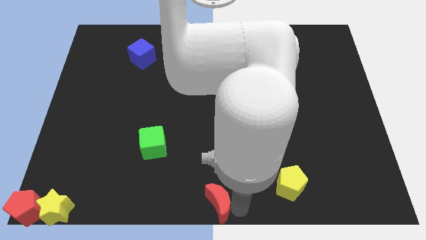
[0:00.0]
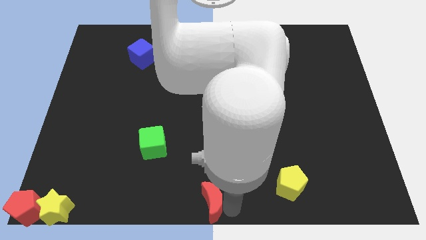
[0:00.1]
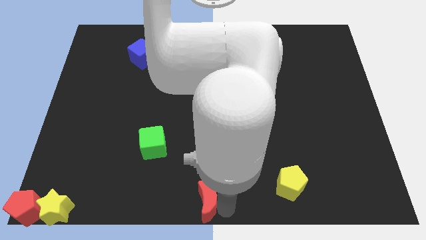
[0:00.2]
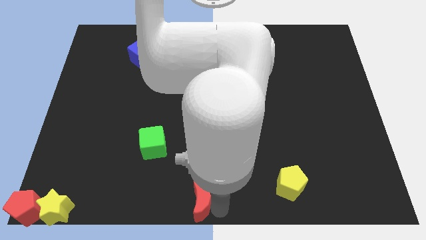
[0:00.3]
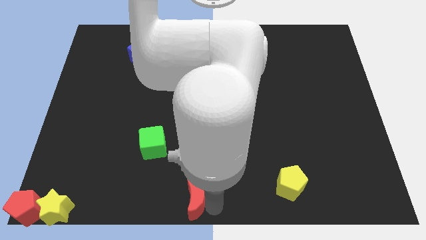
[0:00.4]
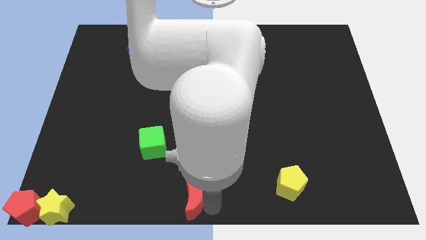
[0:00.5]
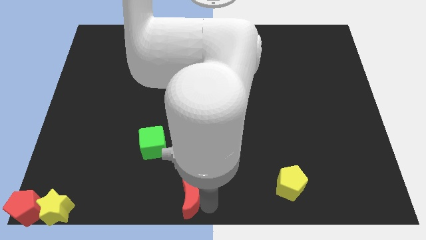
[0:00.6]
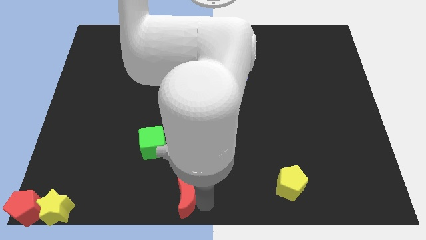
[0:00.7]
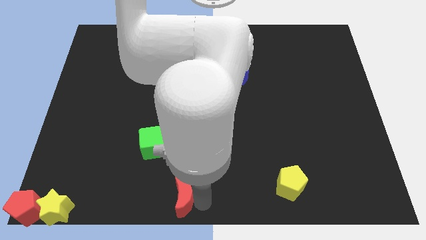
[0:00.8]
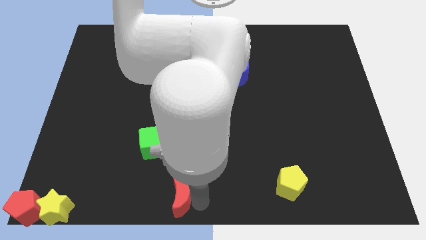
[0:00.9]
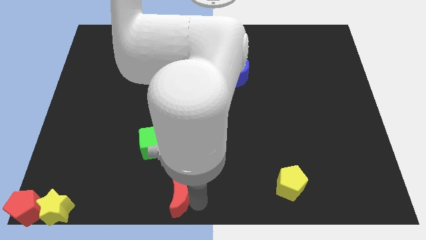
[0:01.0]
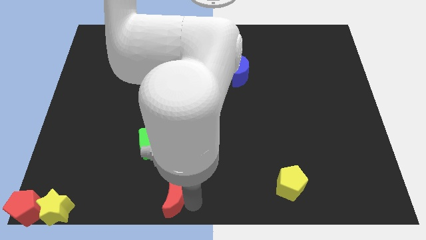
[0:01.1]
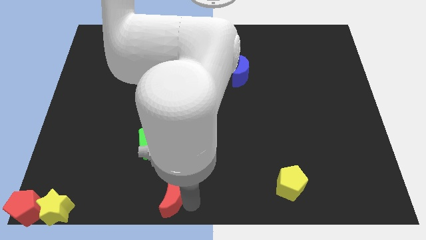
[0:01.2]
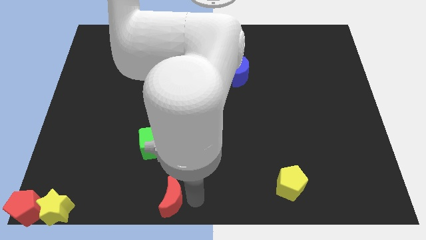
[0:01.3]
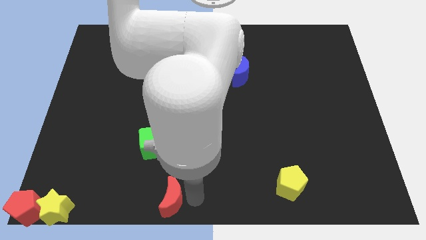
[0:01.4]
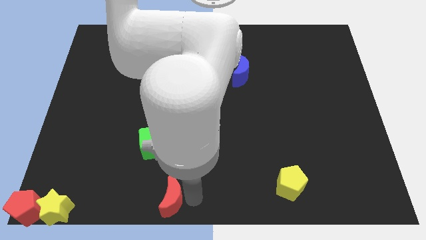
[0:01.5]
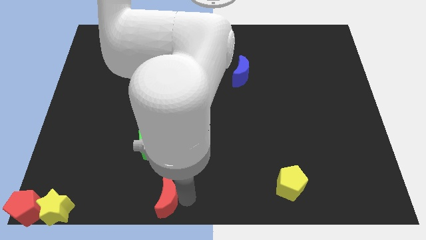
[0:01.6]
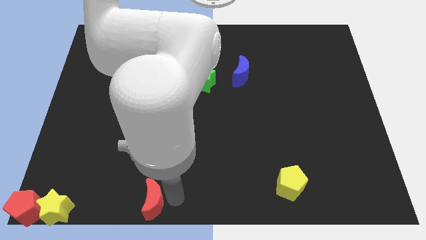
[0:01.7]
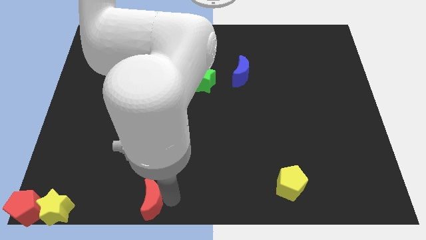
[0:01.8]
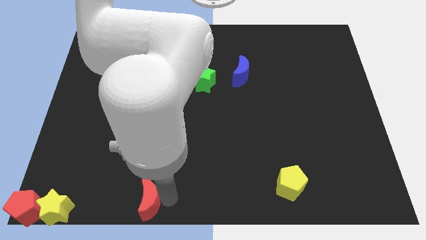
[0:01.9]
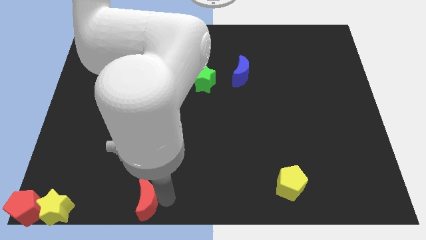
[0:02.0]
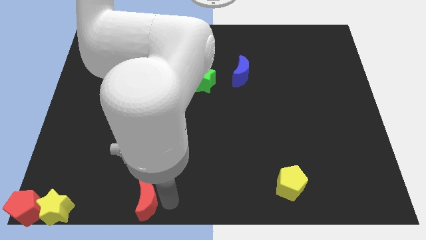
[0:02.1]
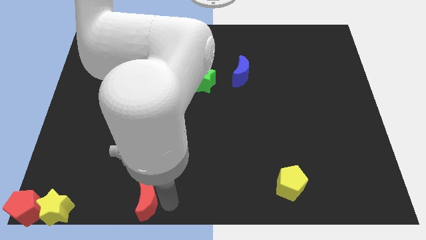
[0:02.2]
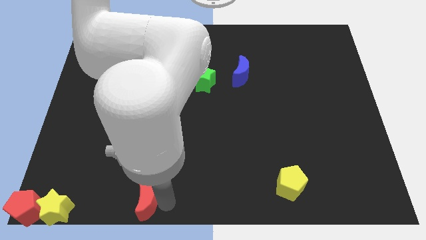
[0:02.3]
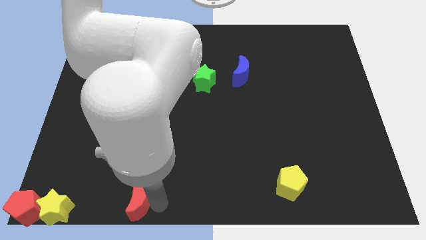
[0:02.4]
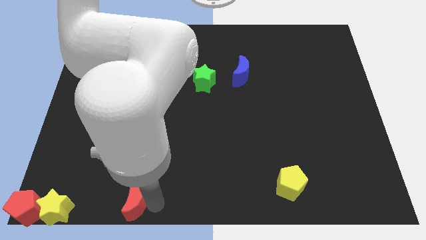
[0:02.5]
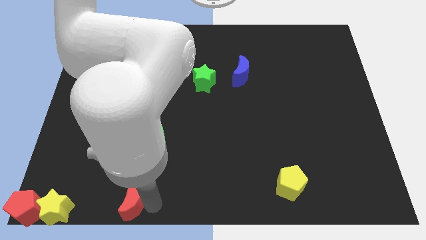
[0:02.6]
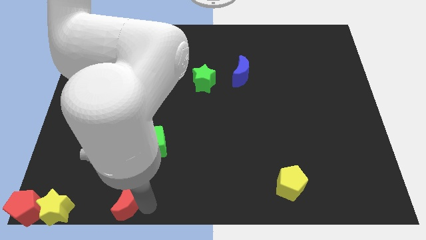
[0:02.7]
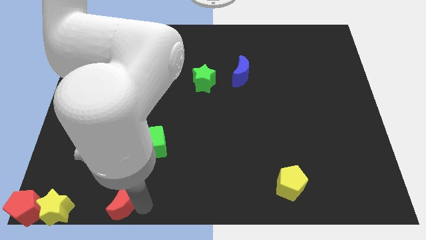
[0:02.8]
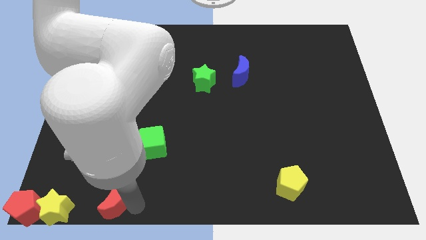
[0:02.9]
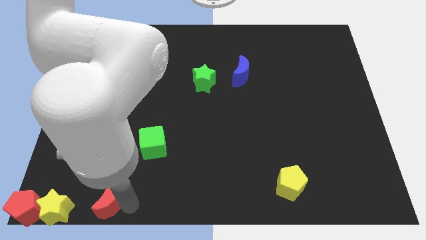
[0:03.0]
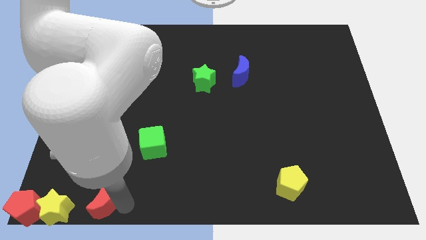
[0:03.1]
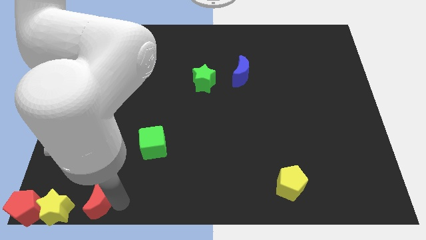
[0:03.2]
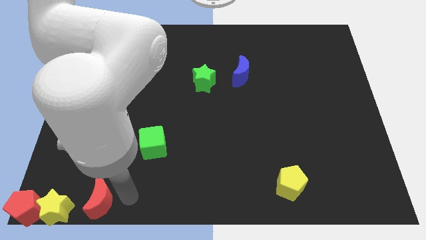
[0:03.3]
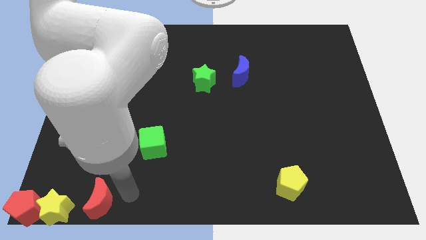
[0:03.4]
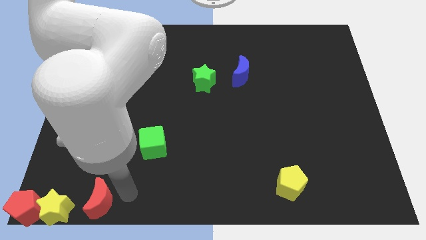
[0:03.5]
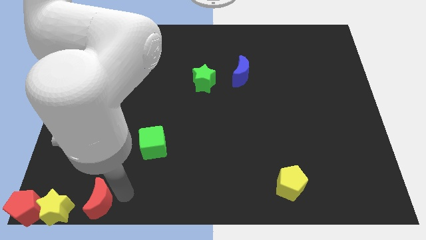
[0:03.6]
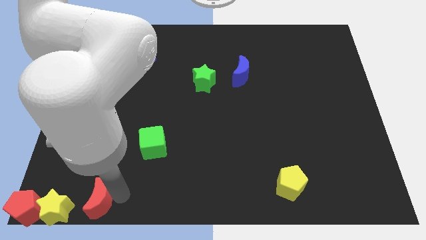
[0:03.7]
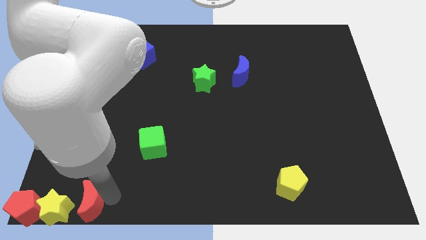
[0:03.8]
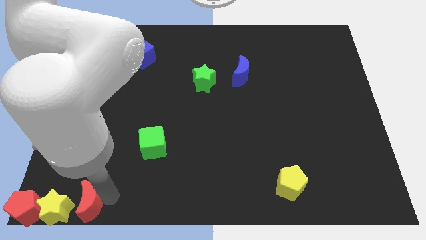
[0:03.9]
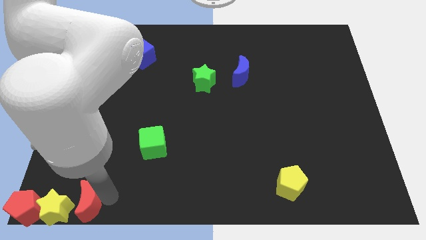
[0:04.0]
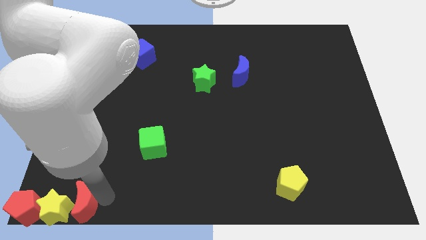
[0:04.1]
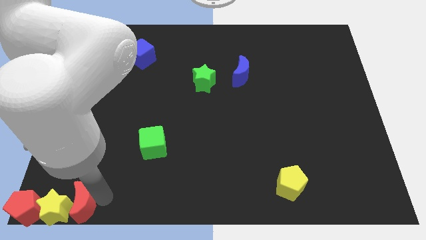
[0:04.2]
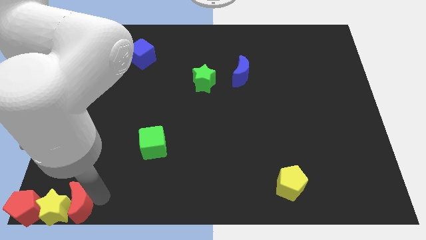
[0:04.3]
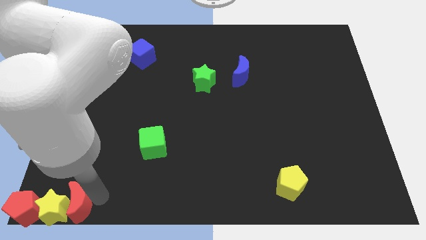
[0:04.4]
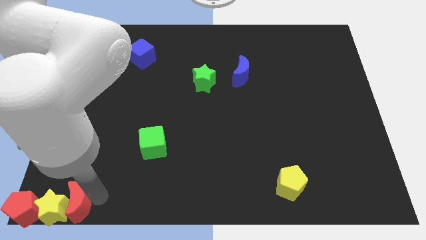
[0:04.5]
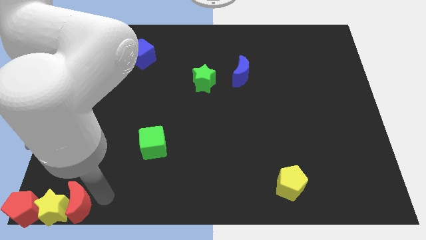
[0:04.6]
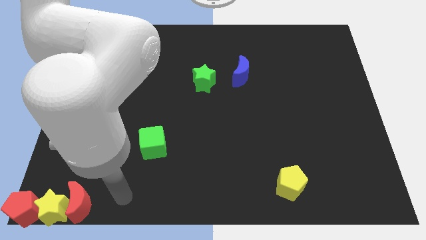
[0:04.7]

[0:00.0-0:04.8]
take the red crescent into the right side of the yellow star

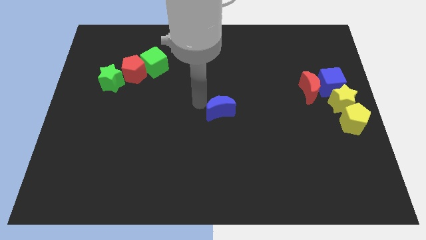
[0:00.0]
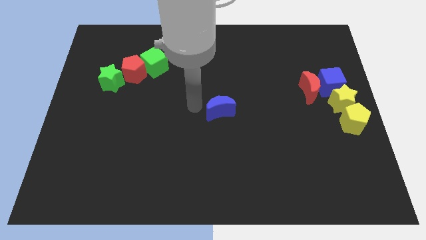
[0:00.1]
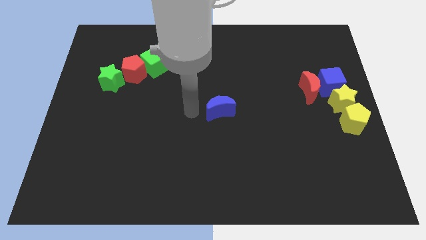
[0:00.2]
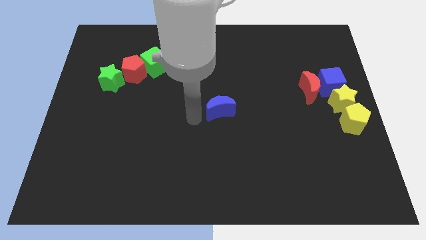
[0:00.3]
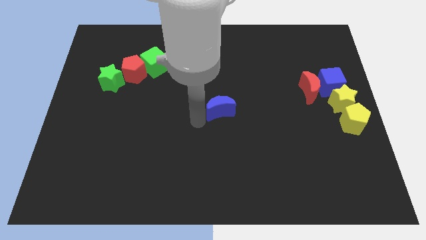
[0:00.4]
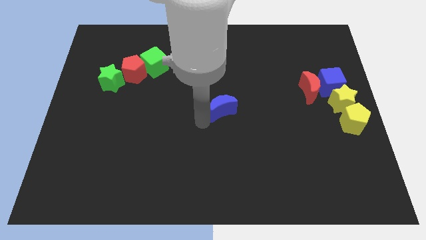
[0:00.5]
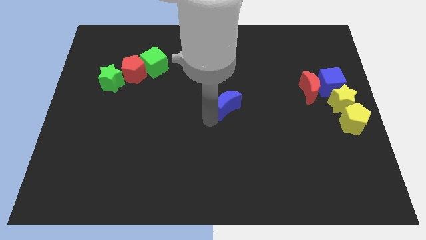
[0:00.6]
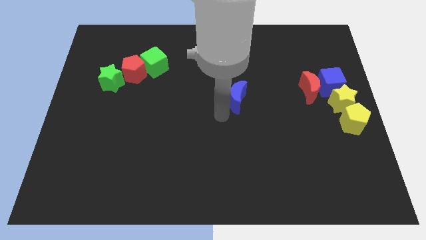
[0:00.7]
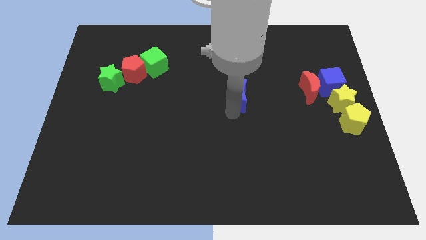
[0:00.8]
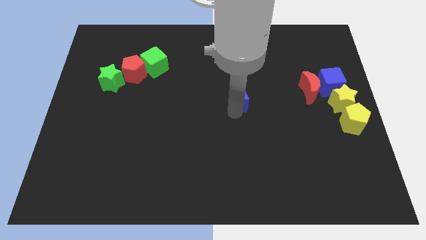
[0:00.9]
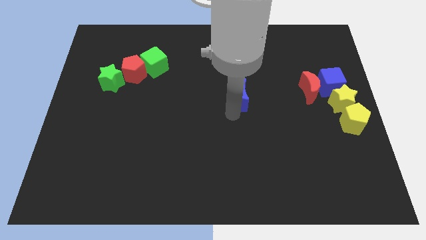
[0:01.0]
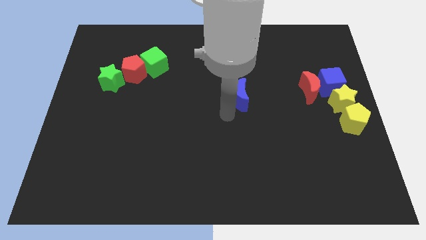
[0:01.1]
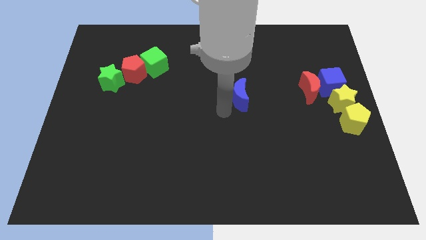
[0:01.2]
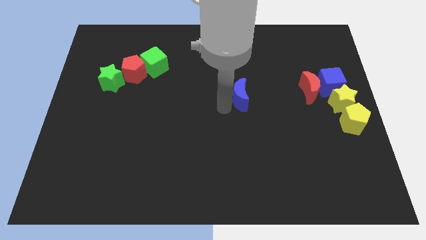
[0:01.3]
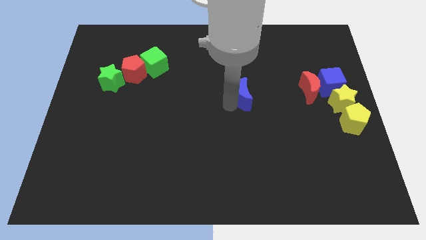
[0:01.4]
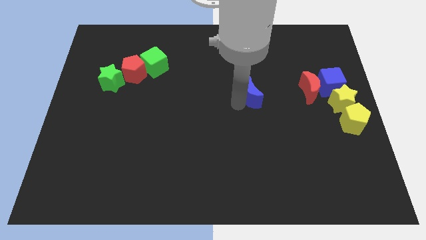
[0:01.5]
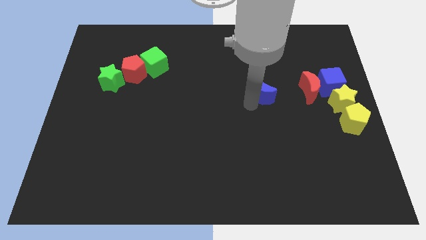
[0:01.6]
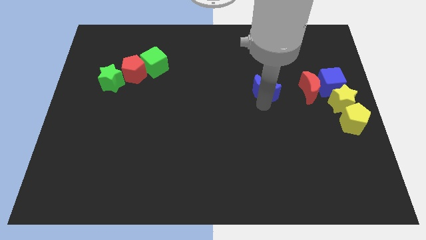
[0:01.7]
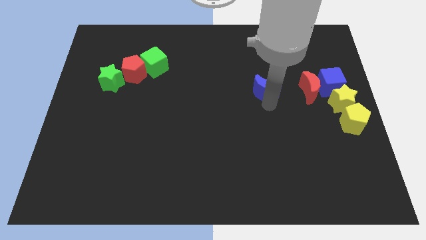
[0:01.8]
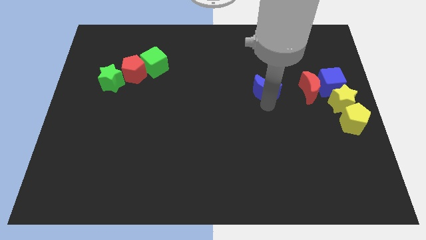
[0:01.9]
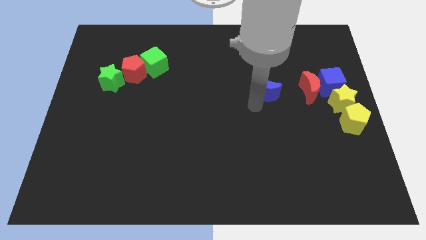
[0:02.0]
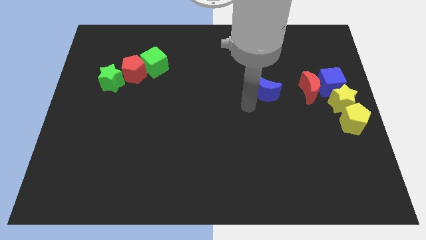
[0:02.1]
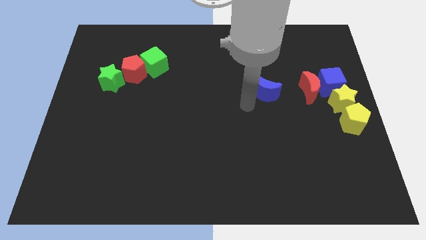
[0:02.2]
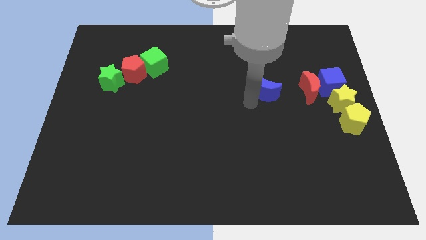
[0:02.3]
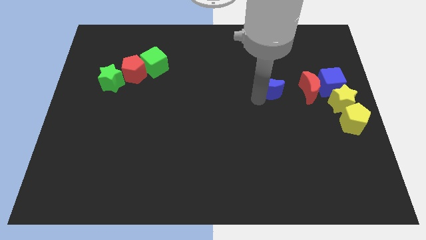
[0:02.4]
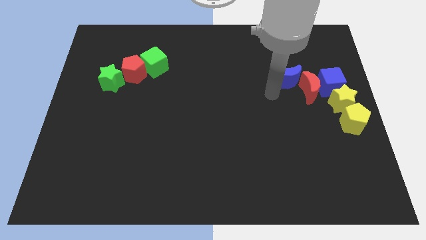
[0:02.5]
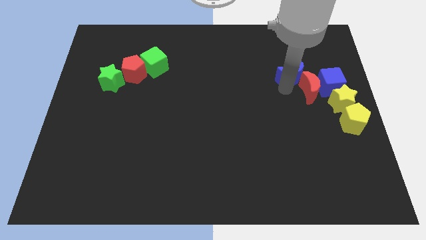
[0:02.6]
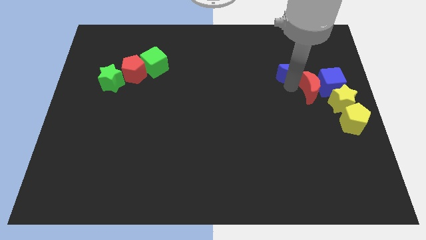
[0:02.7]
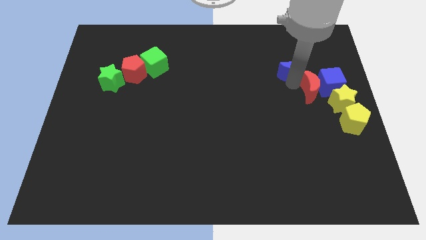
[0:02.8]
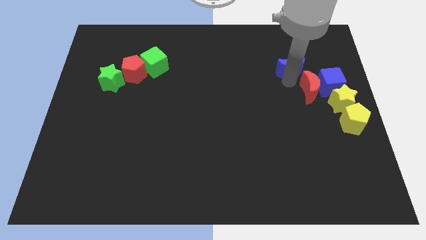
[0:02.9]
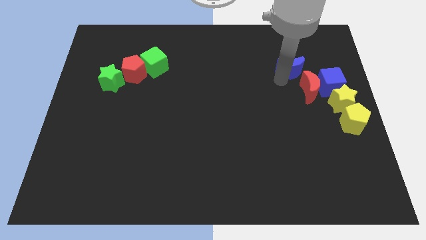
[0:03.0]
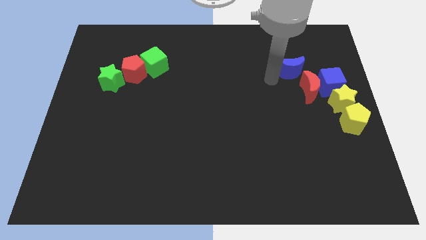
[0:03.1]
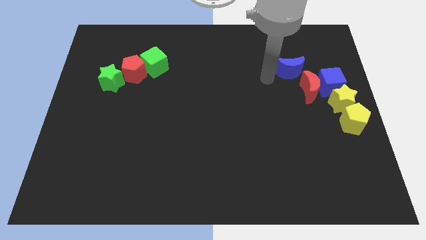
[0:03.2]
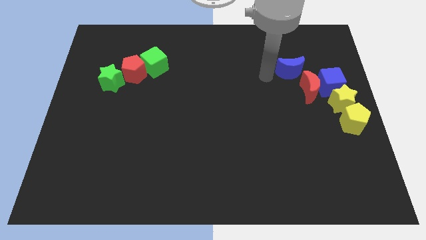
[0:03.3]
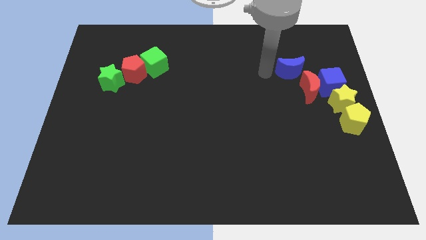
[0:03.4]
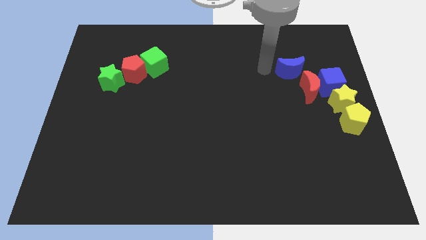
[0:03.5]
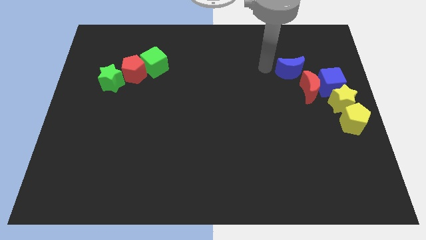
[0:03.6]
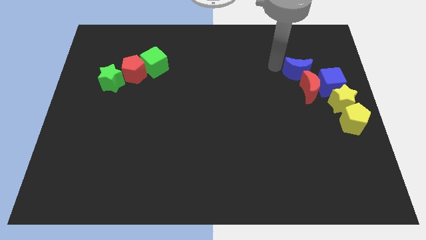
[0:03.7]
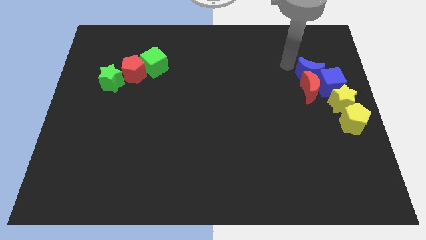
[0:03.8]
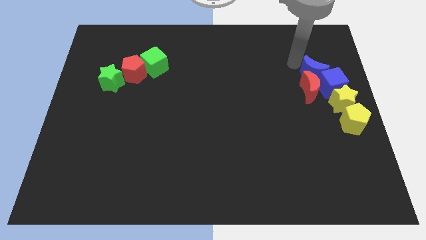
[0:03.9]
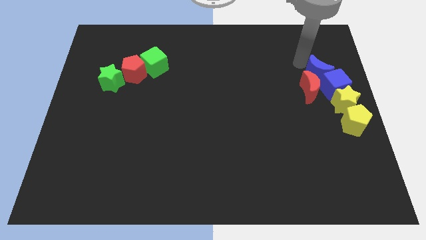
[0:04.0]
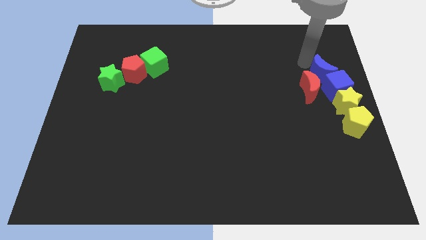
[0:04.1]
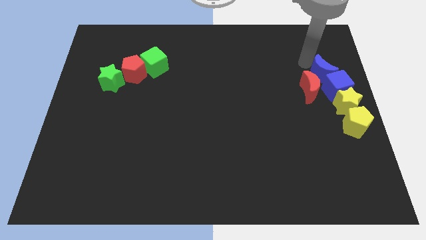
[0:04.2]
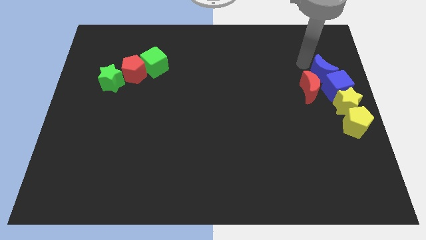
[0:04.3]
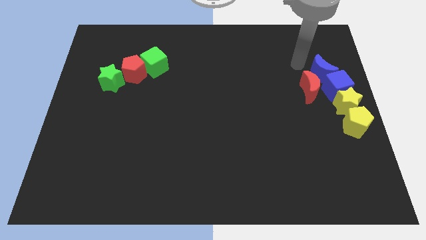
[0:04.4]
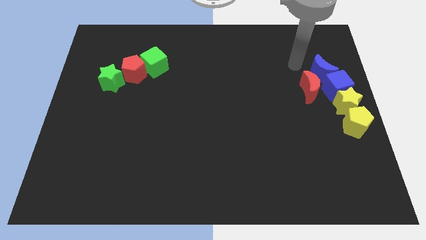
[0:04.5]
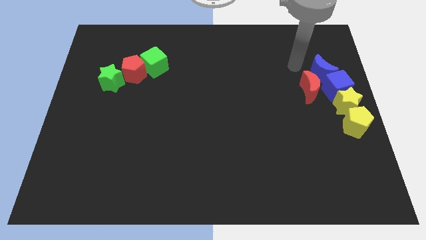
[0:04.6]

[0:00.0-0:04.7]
put the blue crescent on the top of the blue cube
